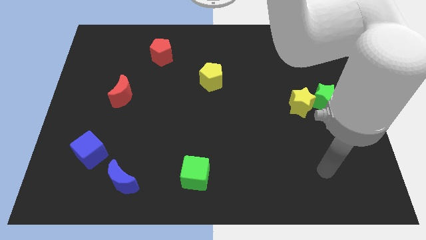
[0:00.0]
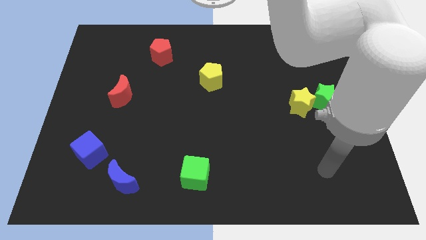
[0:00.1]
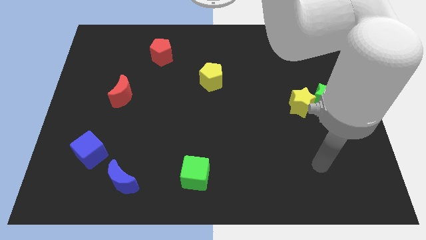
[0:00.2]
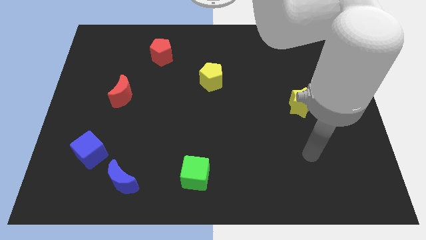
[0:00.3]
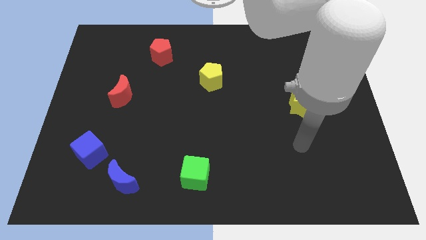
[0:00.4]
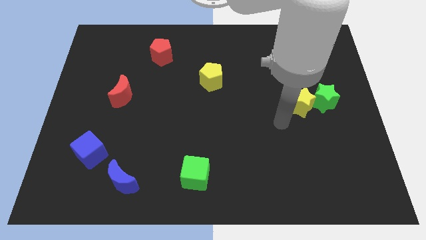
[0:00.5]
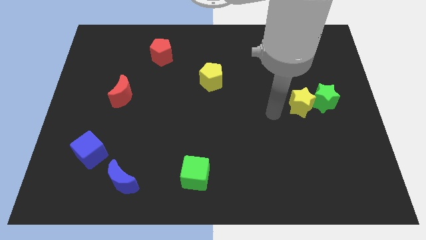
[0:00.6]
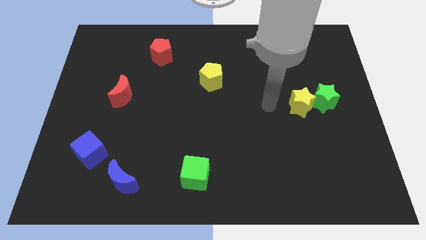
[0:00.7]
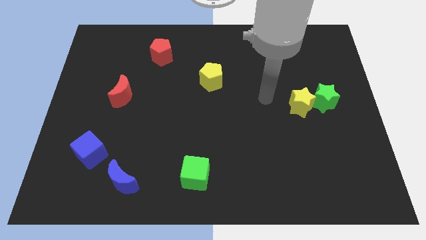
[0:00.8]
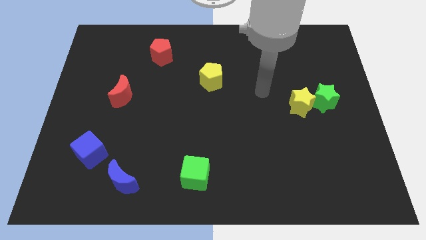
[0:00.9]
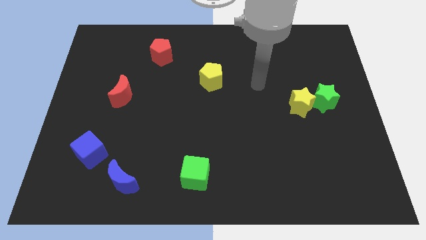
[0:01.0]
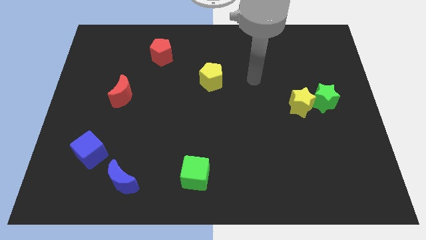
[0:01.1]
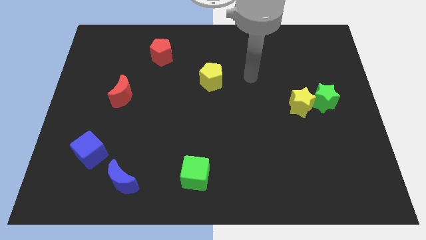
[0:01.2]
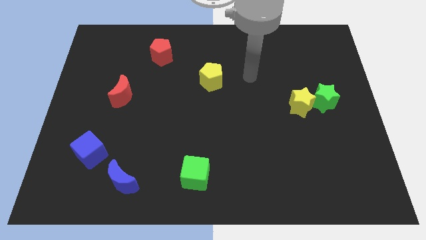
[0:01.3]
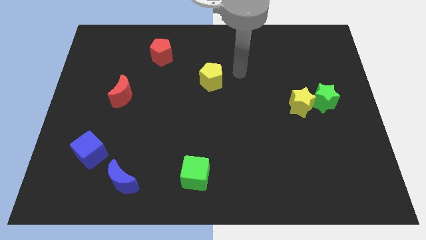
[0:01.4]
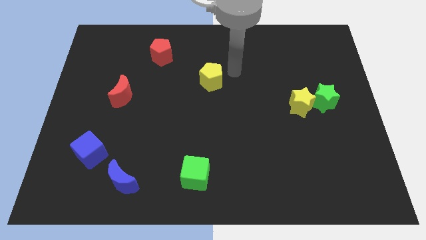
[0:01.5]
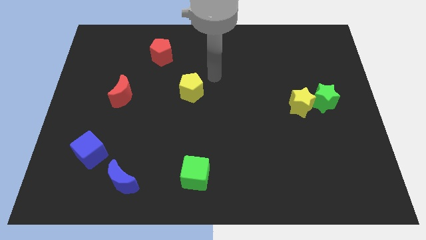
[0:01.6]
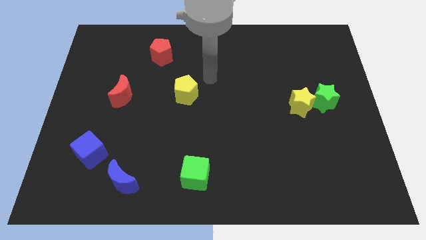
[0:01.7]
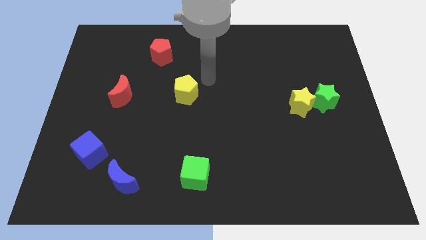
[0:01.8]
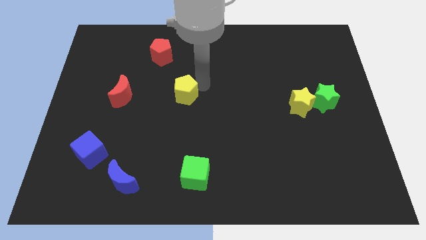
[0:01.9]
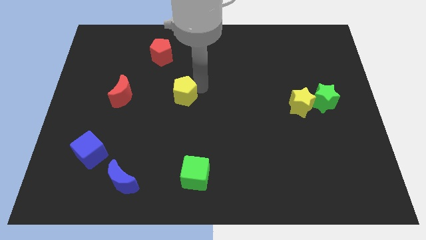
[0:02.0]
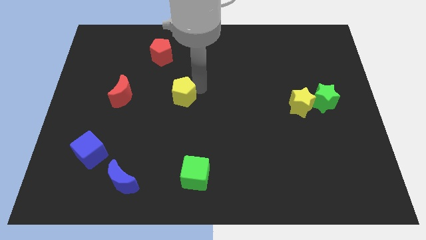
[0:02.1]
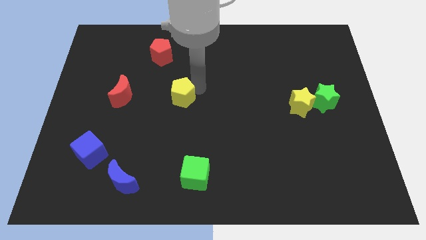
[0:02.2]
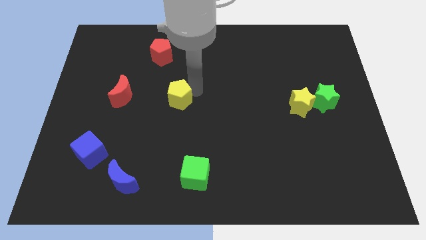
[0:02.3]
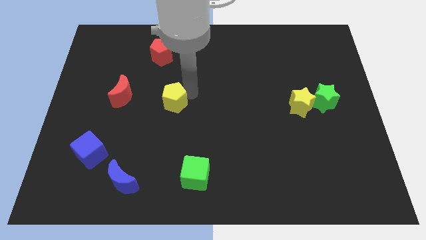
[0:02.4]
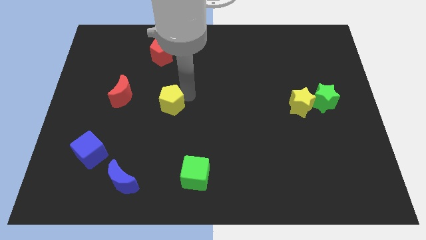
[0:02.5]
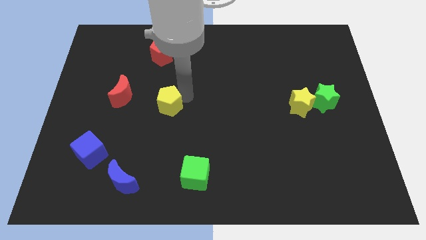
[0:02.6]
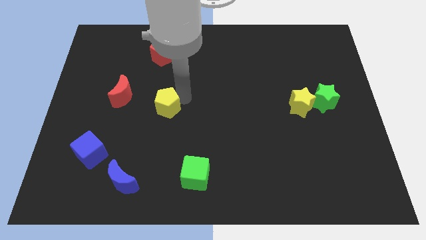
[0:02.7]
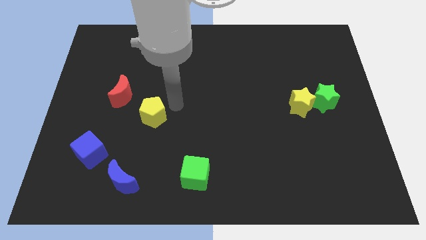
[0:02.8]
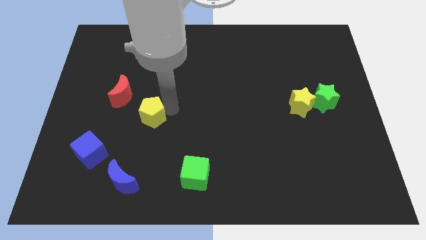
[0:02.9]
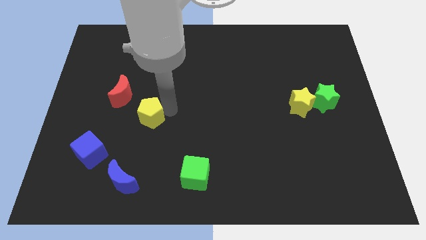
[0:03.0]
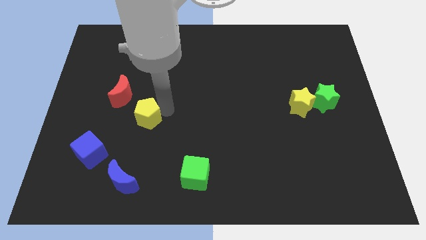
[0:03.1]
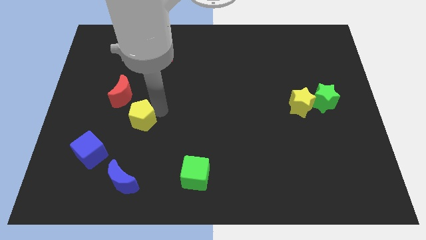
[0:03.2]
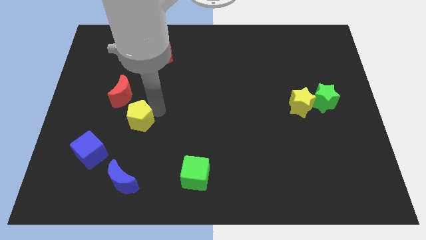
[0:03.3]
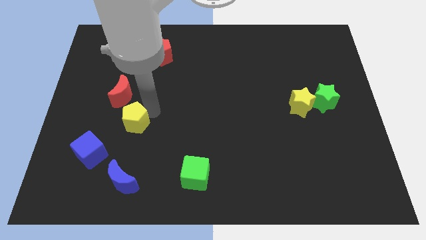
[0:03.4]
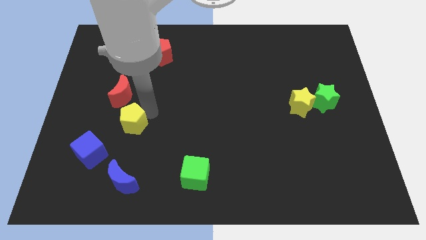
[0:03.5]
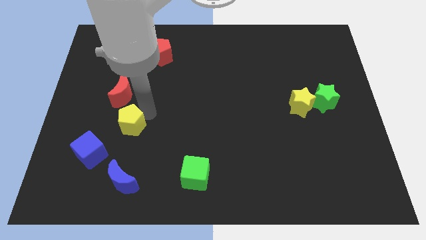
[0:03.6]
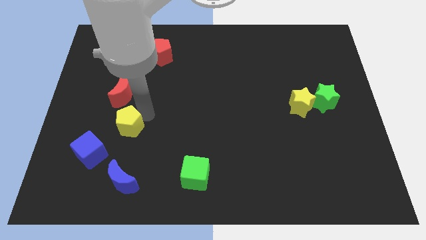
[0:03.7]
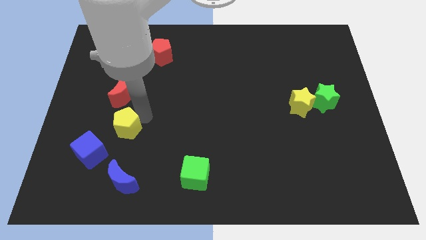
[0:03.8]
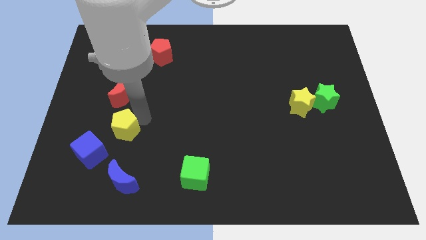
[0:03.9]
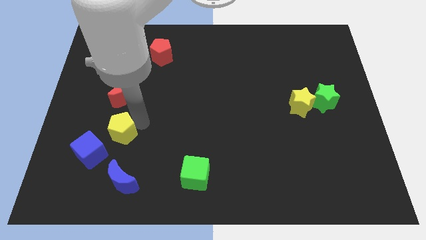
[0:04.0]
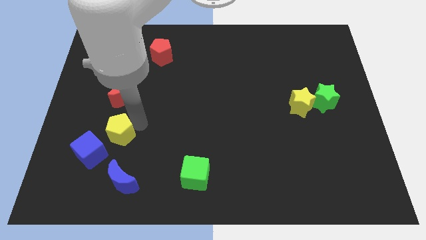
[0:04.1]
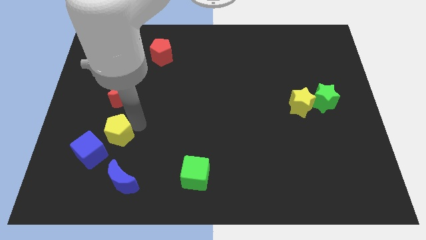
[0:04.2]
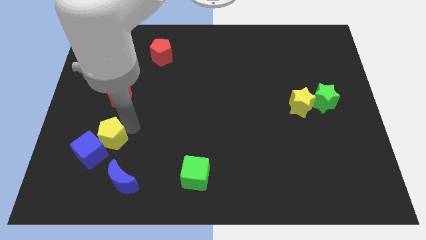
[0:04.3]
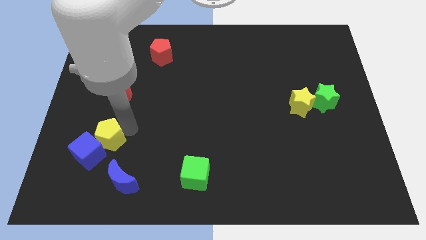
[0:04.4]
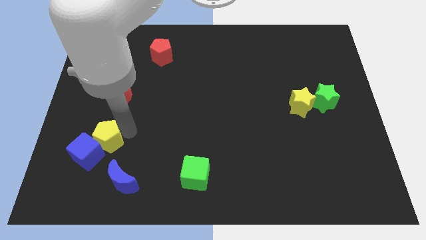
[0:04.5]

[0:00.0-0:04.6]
push the yellow pentagon close to the blue cube

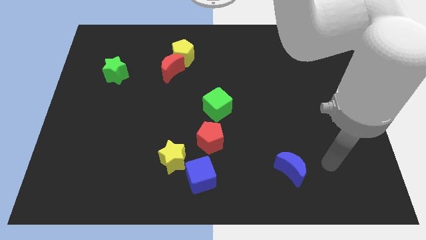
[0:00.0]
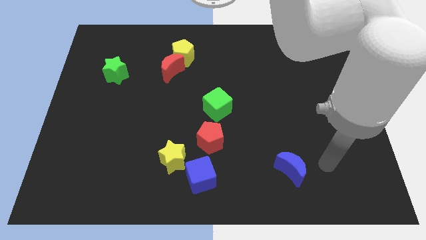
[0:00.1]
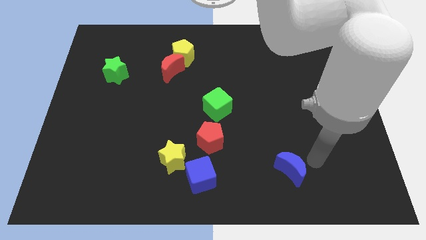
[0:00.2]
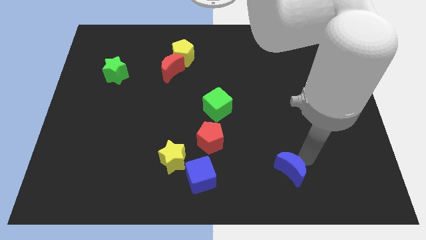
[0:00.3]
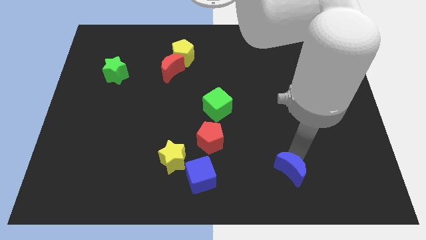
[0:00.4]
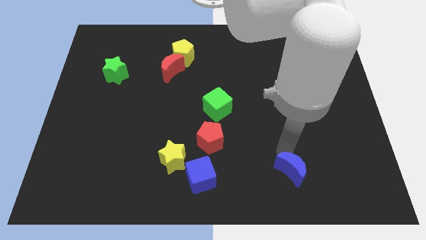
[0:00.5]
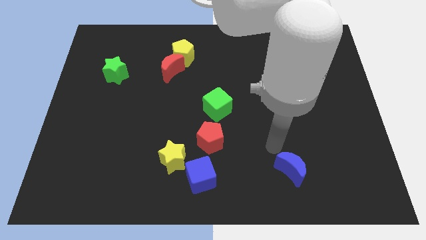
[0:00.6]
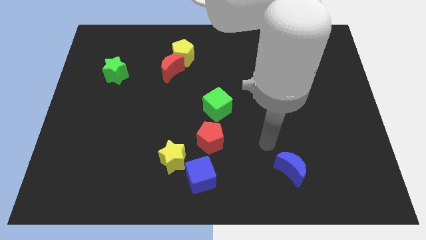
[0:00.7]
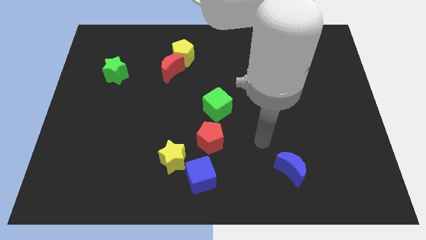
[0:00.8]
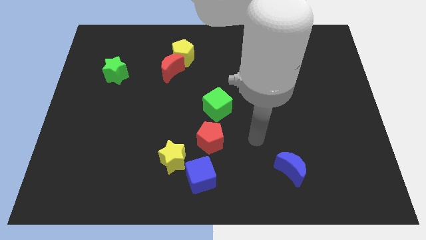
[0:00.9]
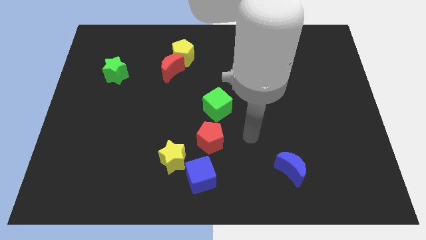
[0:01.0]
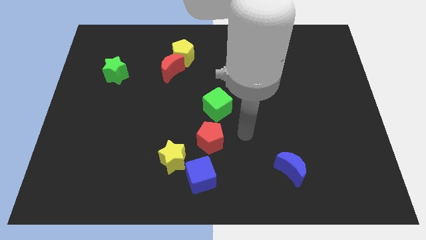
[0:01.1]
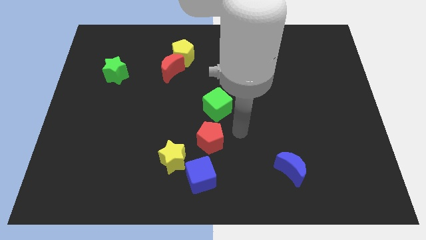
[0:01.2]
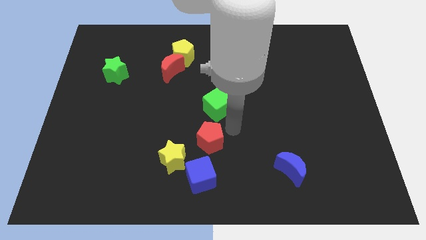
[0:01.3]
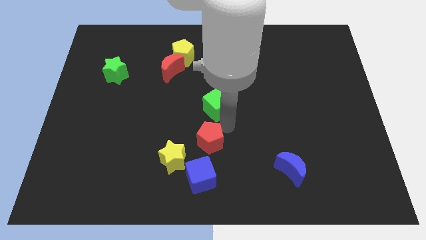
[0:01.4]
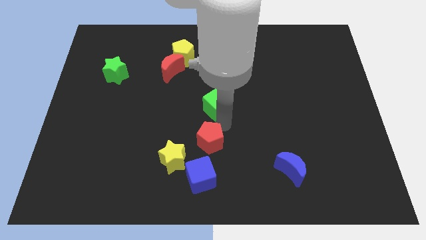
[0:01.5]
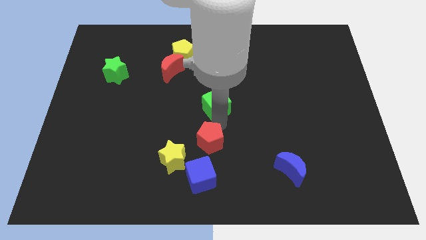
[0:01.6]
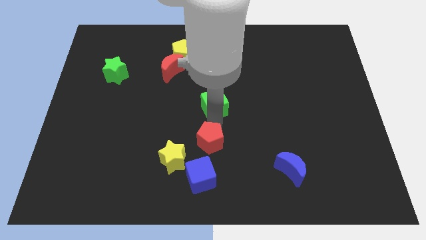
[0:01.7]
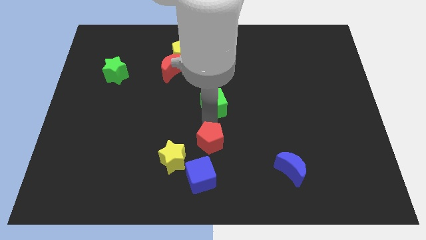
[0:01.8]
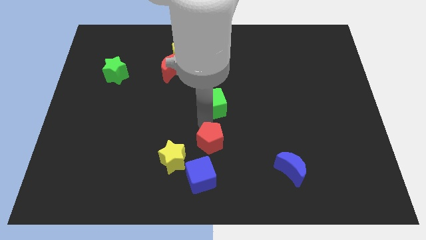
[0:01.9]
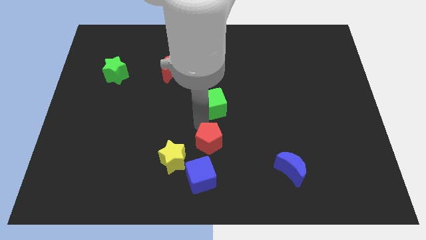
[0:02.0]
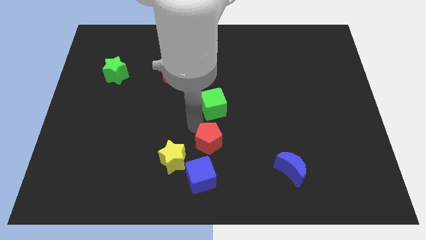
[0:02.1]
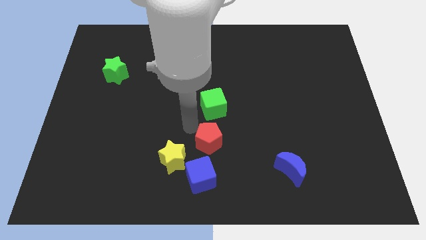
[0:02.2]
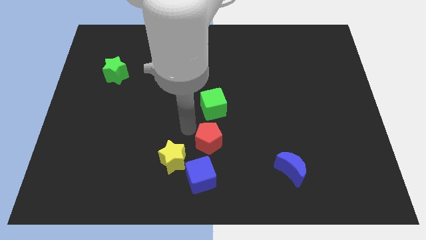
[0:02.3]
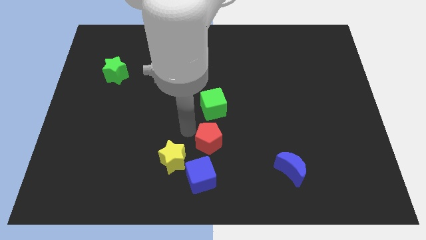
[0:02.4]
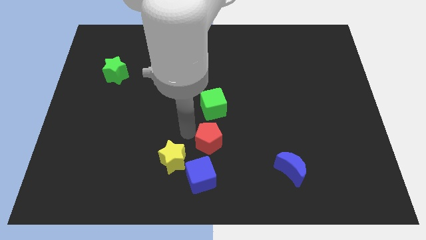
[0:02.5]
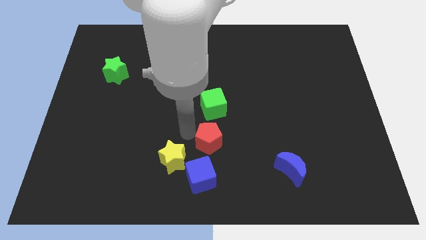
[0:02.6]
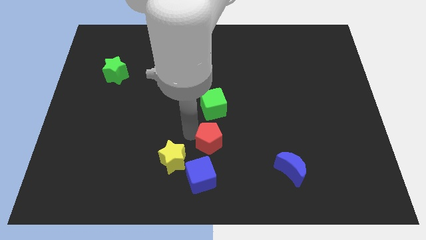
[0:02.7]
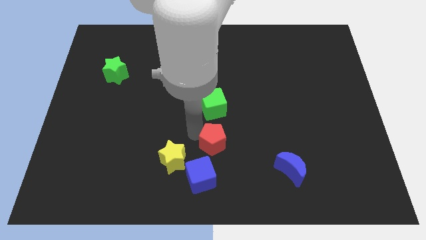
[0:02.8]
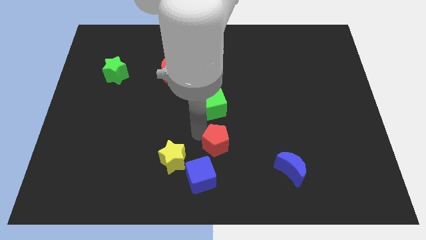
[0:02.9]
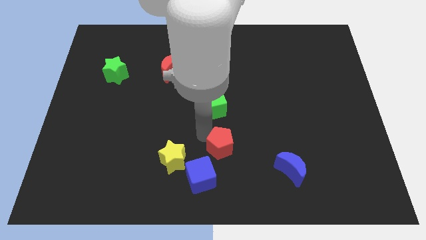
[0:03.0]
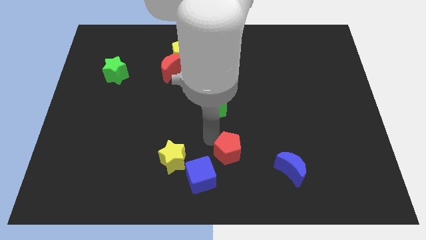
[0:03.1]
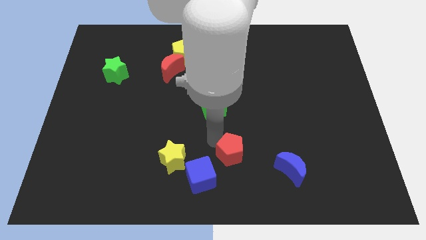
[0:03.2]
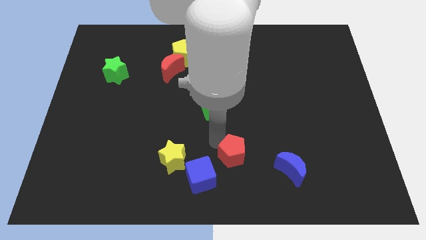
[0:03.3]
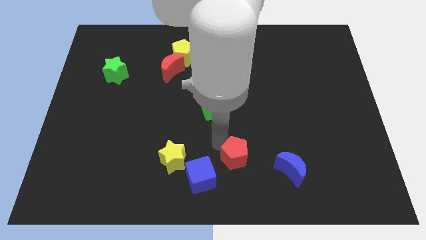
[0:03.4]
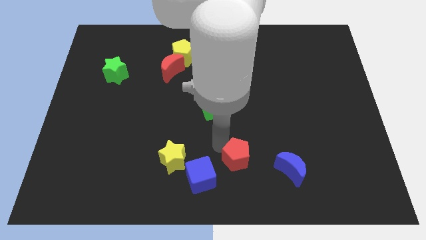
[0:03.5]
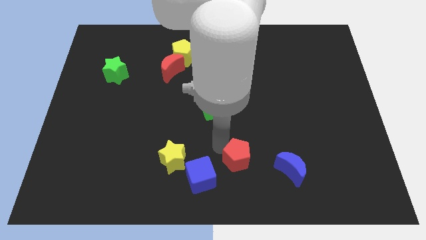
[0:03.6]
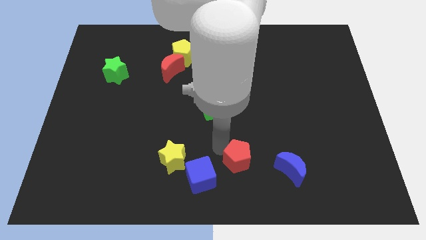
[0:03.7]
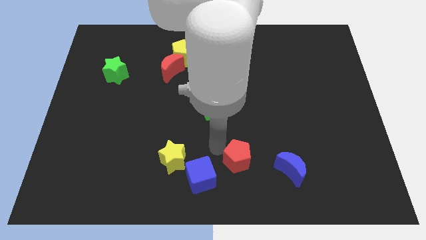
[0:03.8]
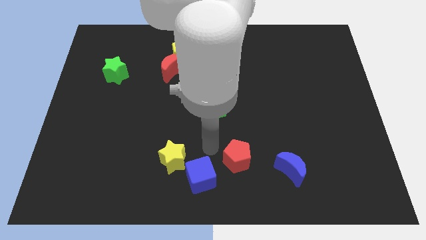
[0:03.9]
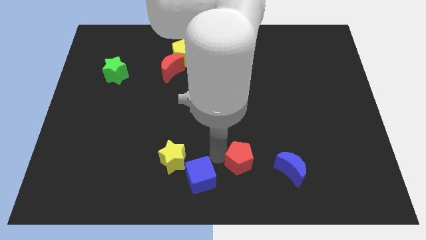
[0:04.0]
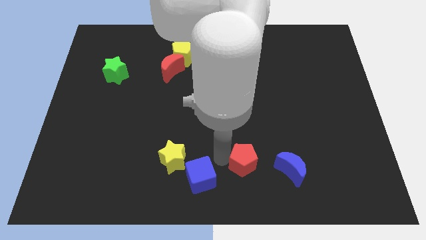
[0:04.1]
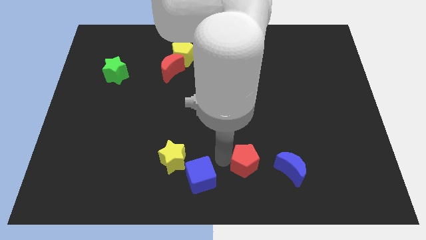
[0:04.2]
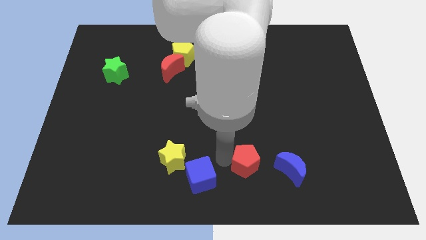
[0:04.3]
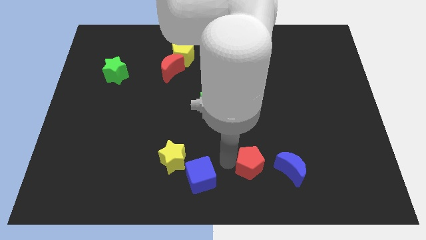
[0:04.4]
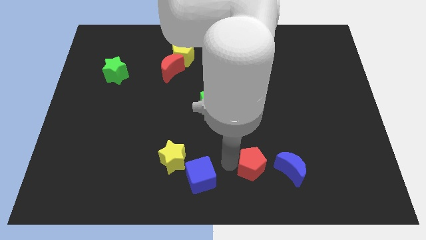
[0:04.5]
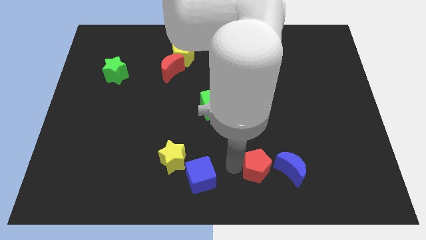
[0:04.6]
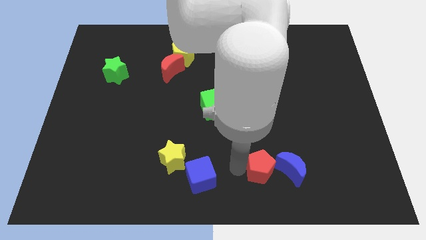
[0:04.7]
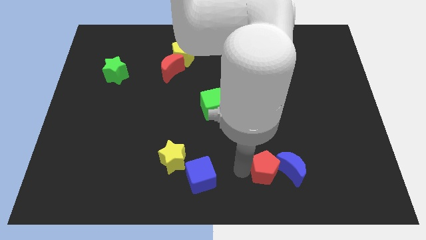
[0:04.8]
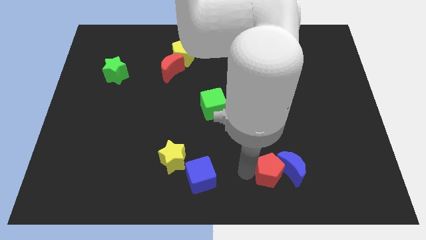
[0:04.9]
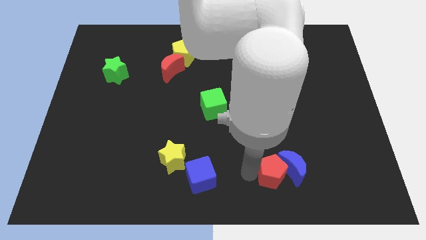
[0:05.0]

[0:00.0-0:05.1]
move the red pentagon next to the blue moon
